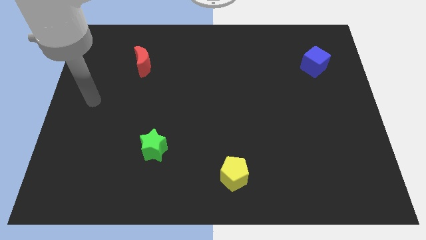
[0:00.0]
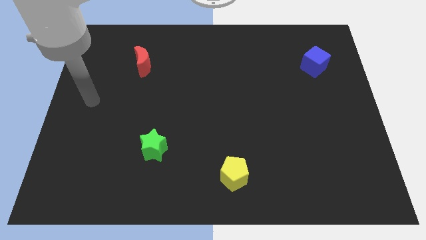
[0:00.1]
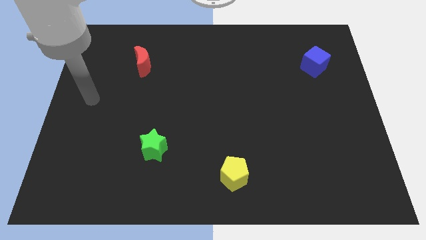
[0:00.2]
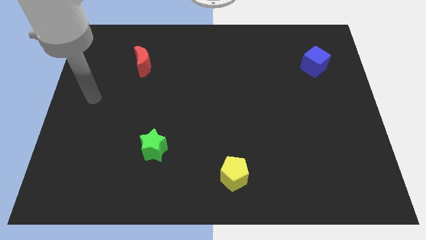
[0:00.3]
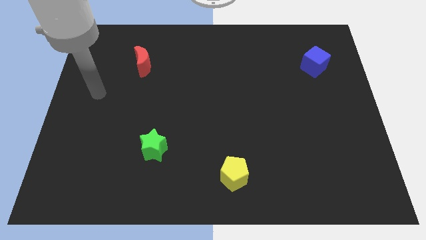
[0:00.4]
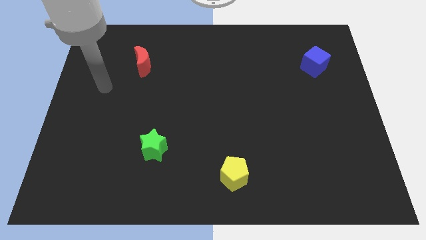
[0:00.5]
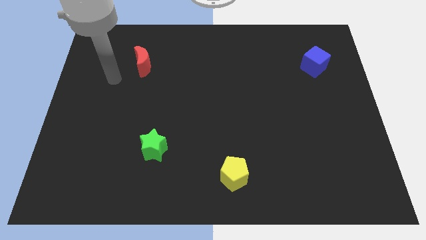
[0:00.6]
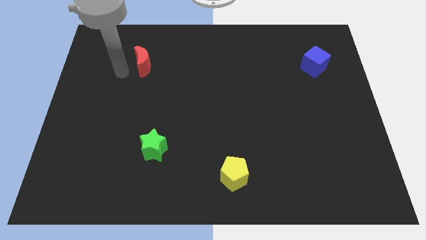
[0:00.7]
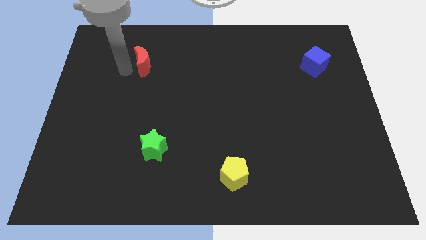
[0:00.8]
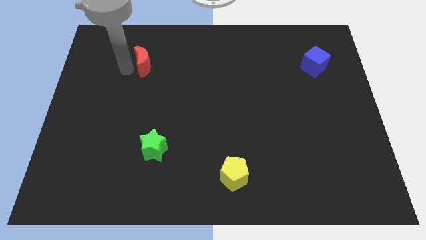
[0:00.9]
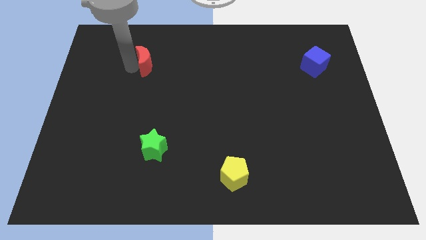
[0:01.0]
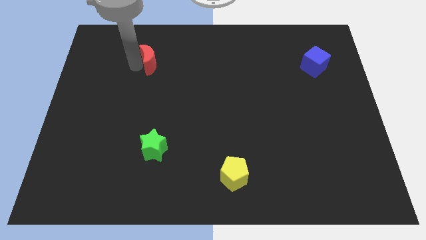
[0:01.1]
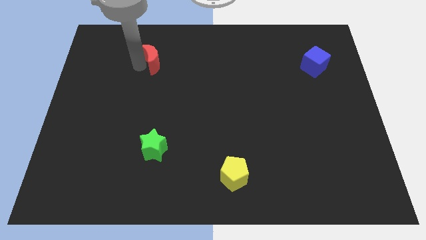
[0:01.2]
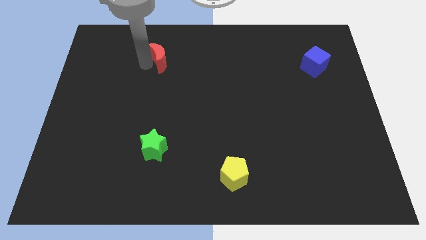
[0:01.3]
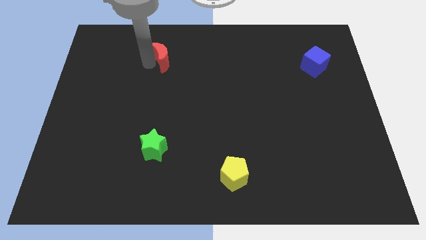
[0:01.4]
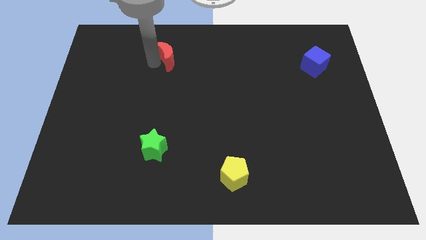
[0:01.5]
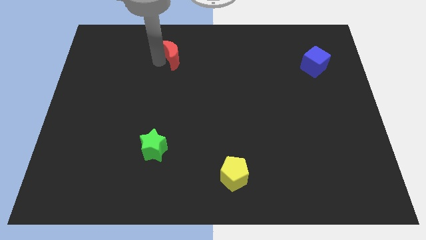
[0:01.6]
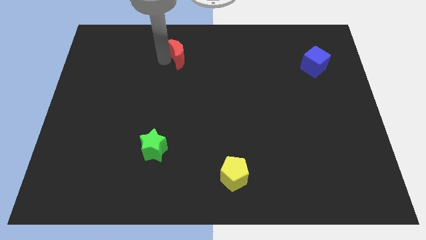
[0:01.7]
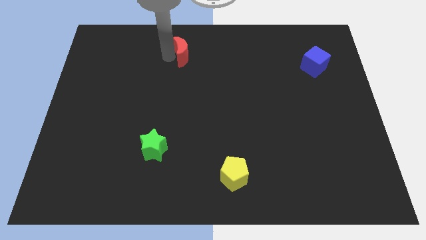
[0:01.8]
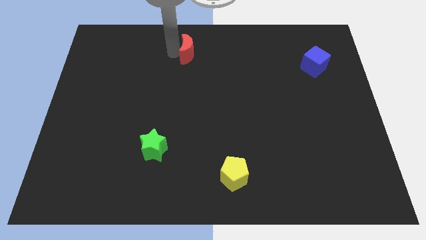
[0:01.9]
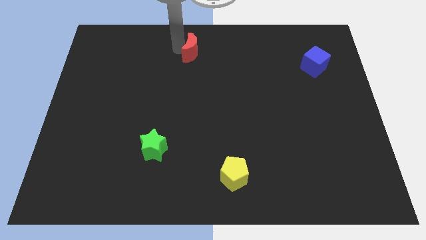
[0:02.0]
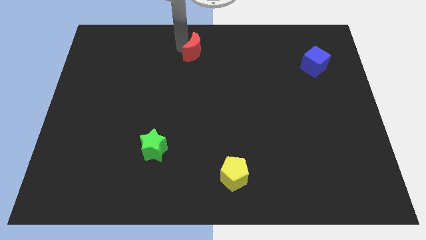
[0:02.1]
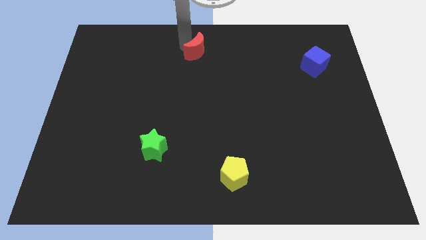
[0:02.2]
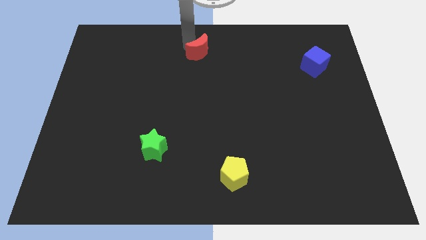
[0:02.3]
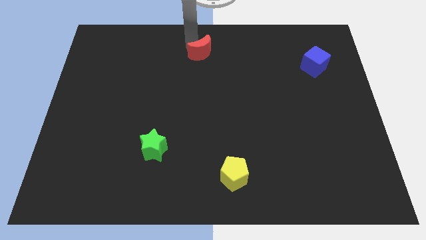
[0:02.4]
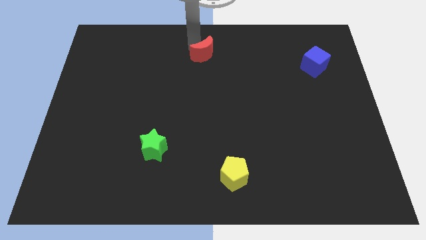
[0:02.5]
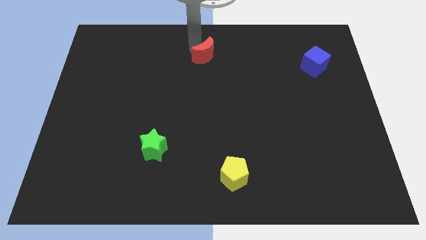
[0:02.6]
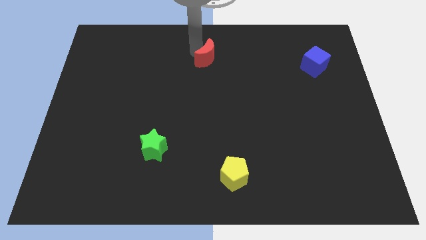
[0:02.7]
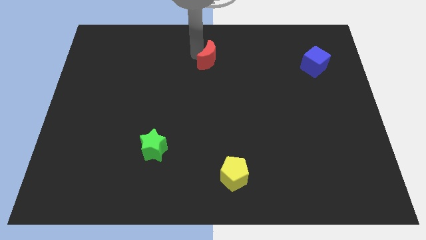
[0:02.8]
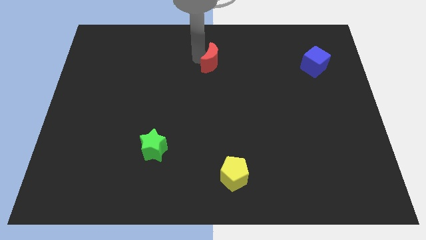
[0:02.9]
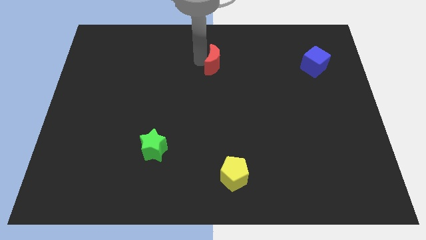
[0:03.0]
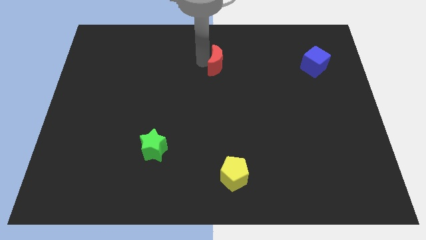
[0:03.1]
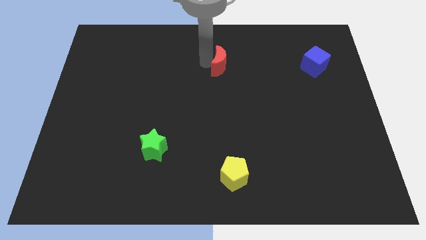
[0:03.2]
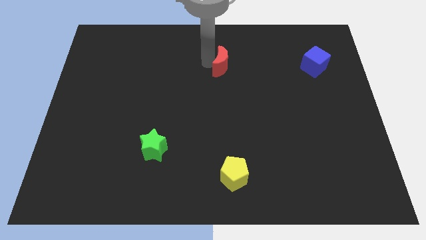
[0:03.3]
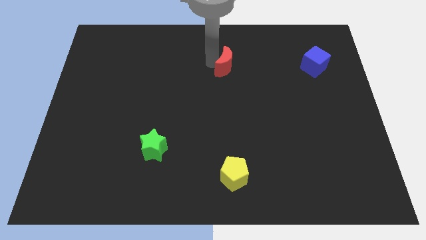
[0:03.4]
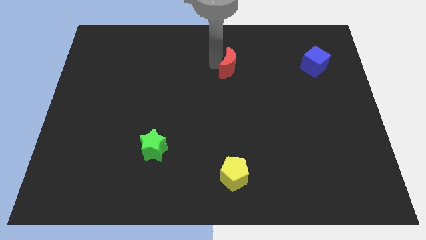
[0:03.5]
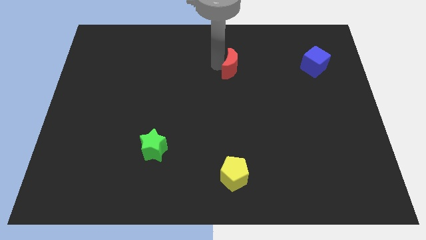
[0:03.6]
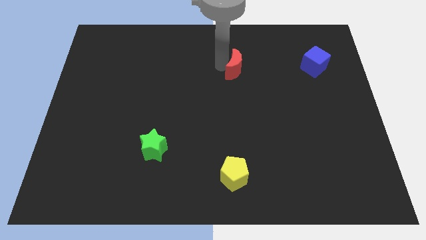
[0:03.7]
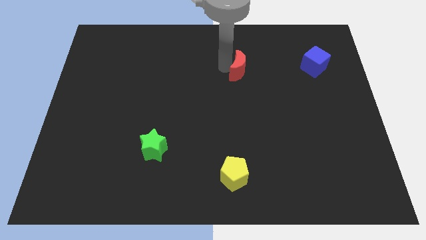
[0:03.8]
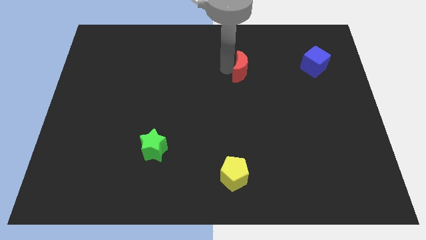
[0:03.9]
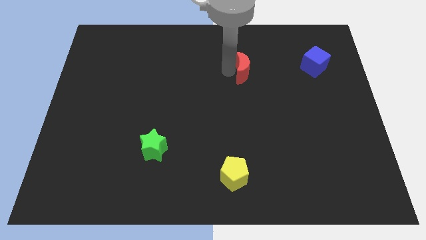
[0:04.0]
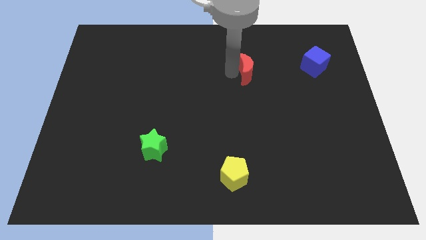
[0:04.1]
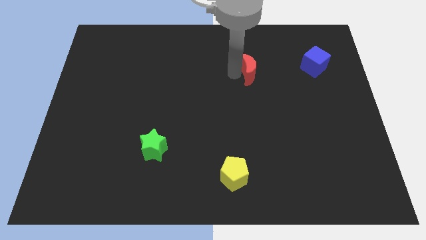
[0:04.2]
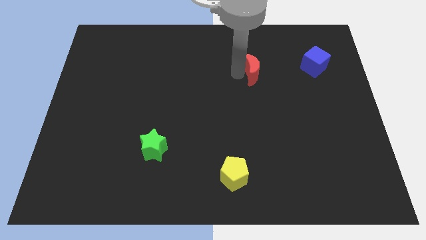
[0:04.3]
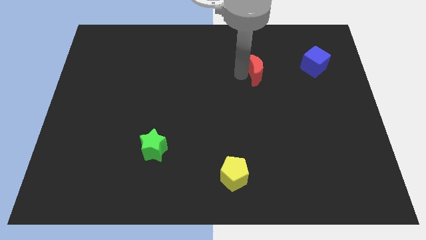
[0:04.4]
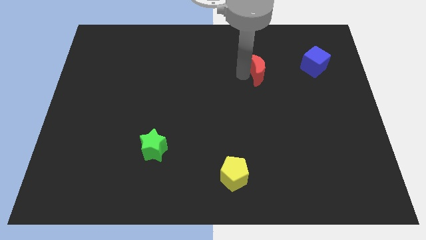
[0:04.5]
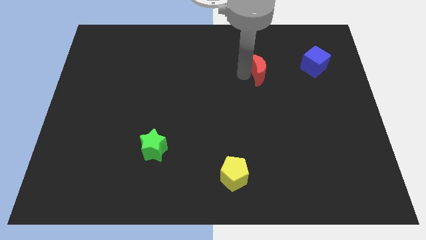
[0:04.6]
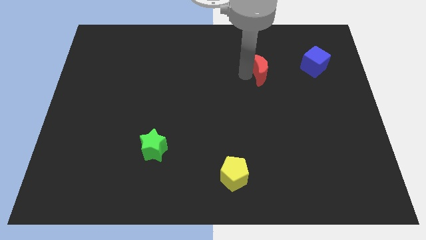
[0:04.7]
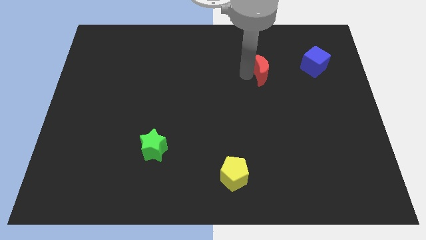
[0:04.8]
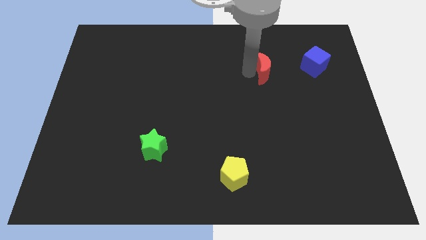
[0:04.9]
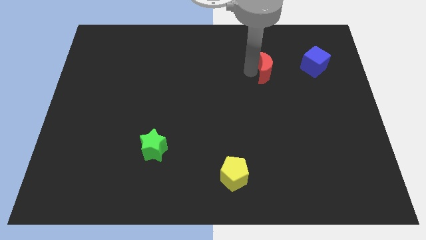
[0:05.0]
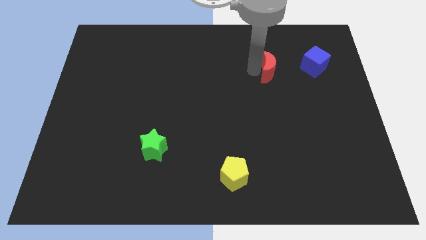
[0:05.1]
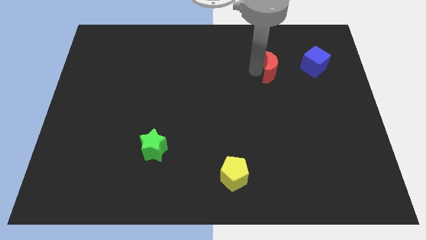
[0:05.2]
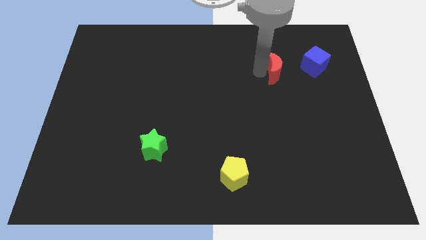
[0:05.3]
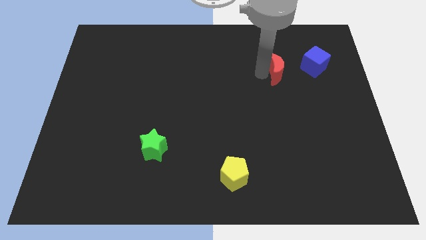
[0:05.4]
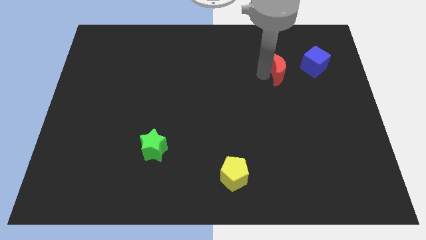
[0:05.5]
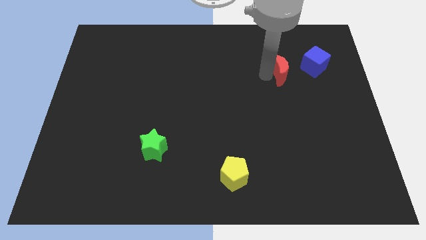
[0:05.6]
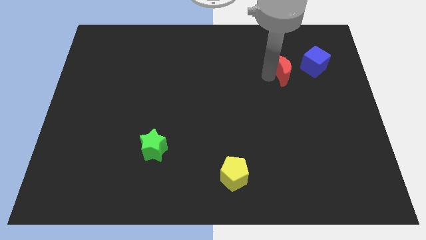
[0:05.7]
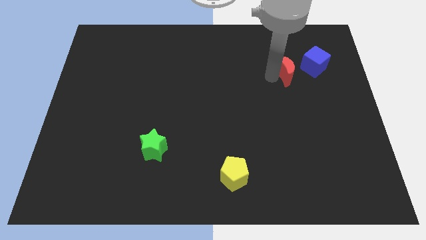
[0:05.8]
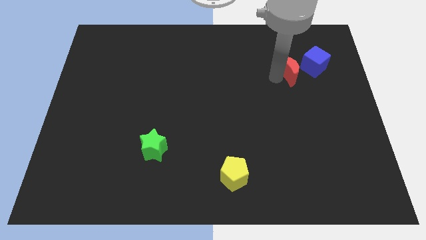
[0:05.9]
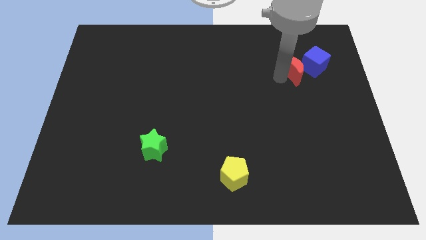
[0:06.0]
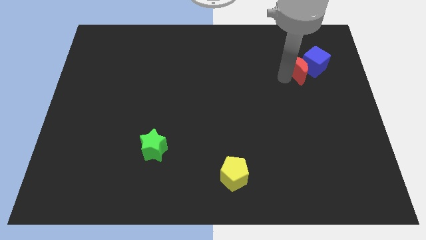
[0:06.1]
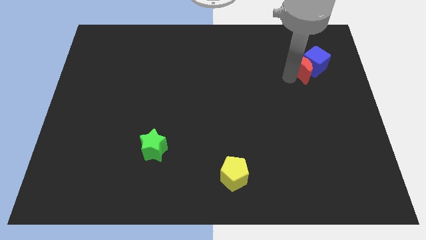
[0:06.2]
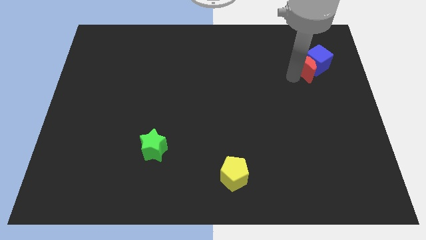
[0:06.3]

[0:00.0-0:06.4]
move the moon next to the blue cube

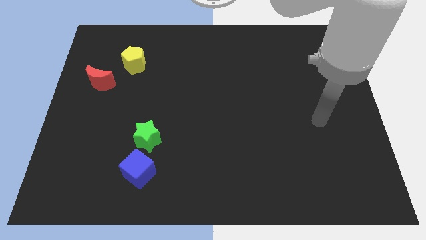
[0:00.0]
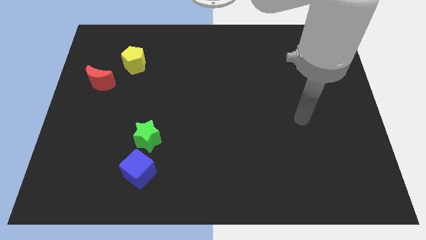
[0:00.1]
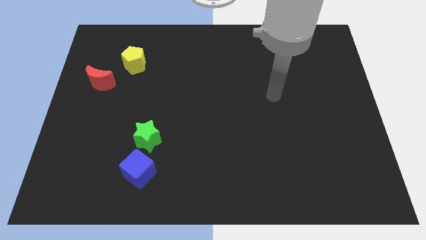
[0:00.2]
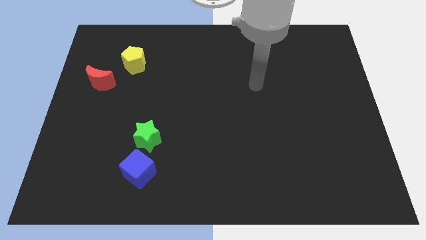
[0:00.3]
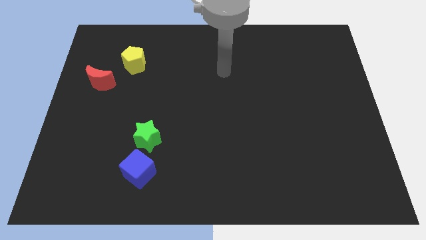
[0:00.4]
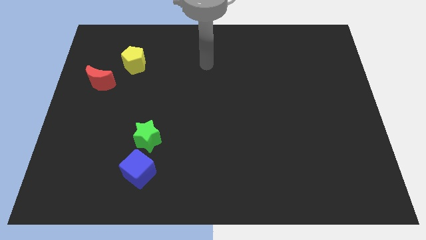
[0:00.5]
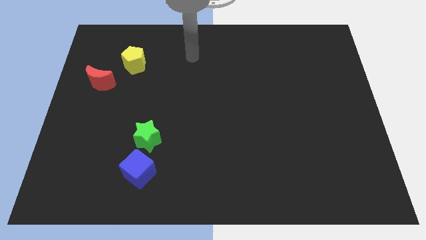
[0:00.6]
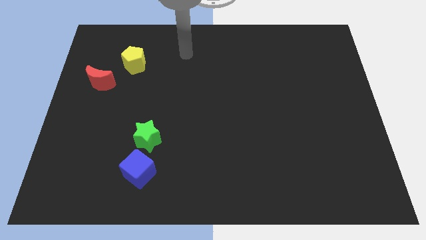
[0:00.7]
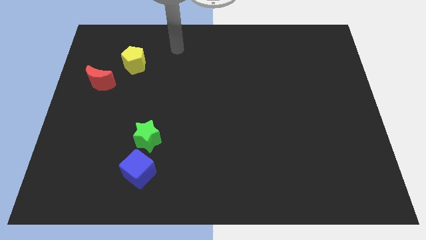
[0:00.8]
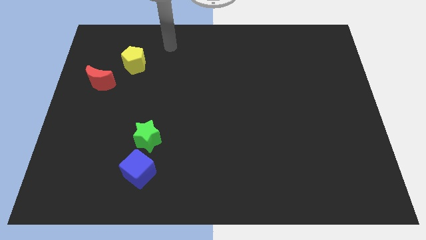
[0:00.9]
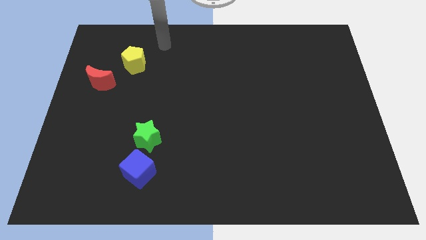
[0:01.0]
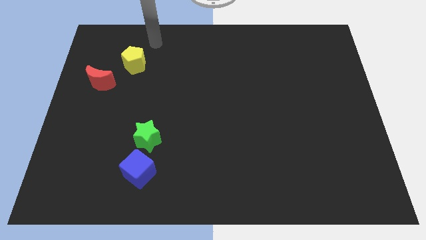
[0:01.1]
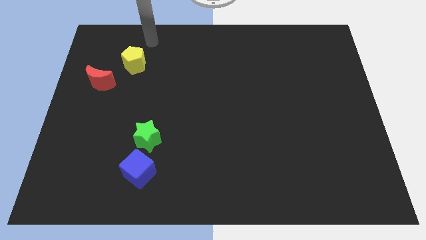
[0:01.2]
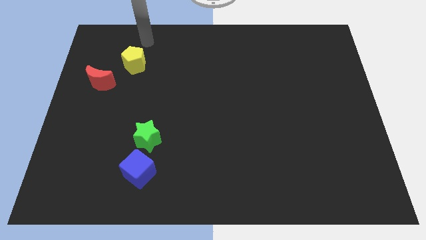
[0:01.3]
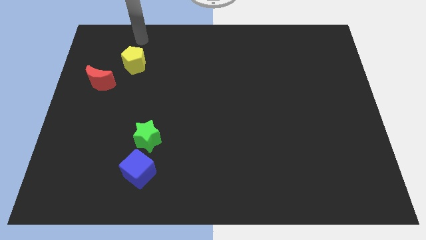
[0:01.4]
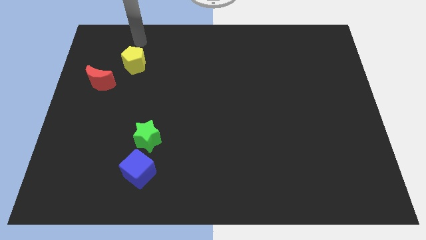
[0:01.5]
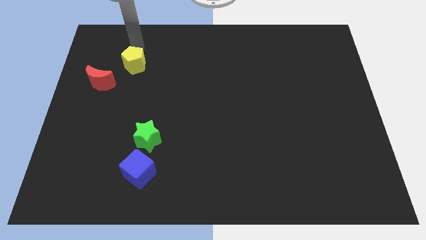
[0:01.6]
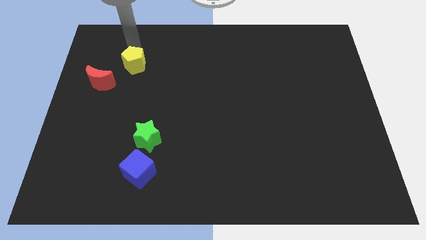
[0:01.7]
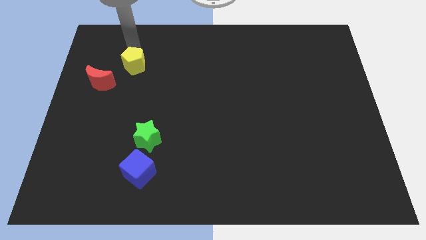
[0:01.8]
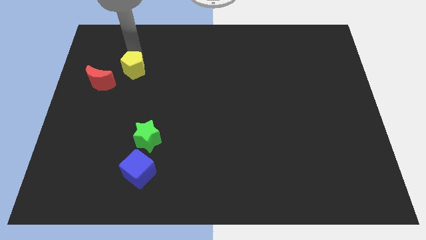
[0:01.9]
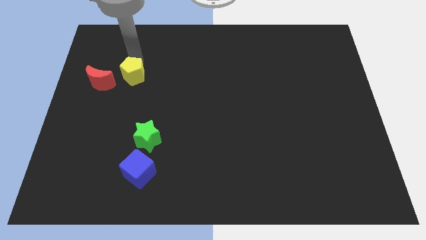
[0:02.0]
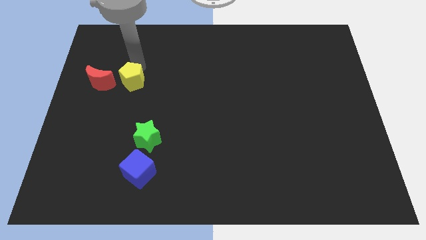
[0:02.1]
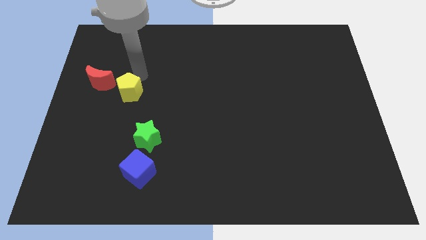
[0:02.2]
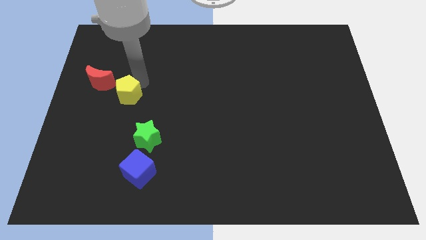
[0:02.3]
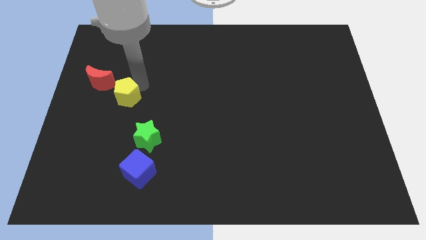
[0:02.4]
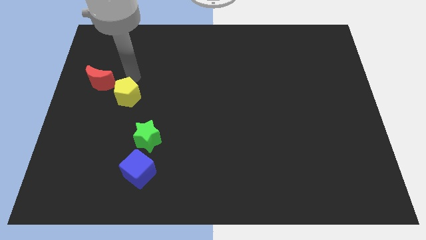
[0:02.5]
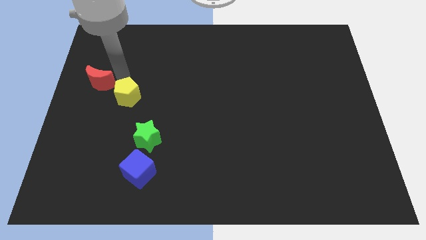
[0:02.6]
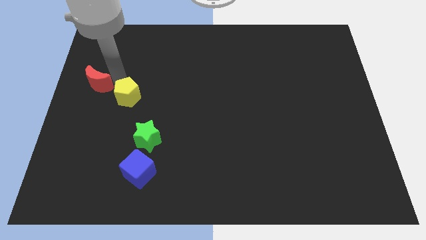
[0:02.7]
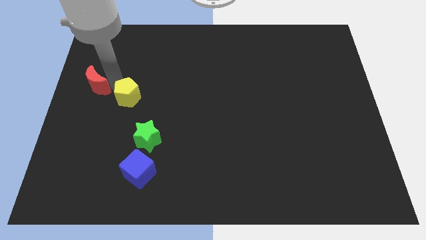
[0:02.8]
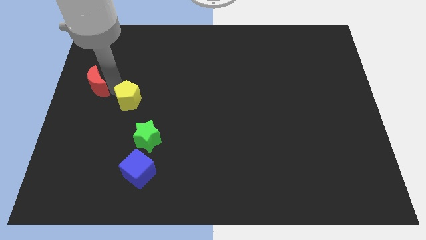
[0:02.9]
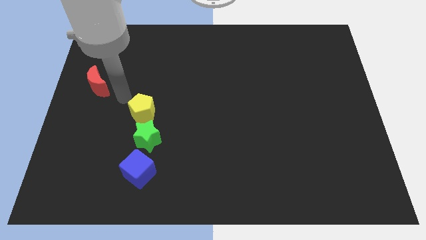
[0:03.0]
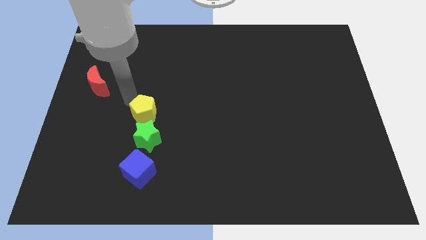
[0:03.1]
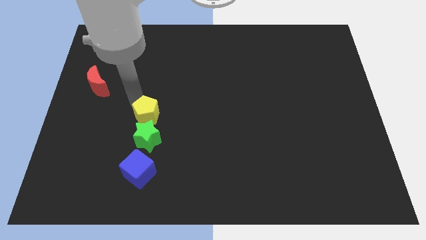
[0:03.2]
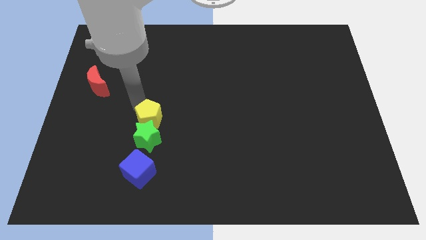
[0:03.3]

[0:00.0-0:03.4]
slide the yellow pentagon close to the green block
